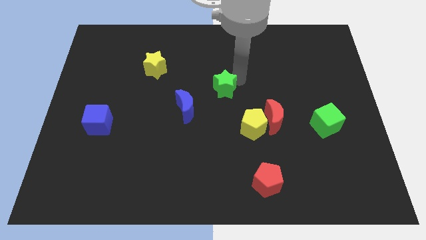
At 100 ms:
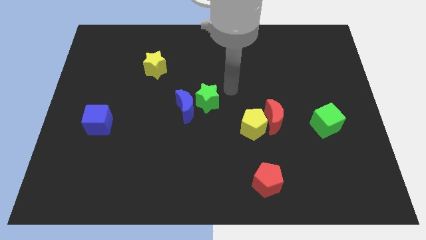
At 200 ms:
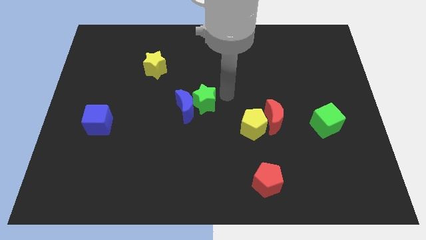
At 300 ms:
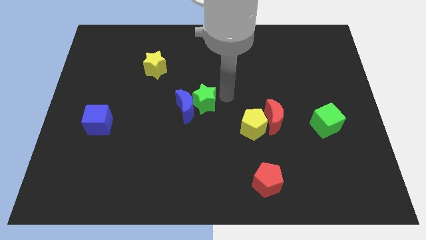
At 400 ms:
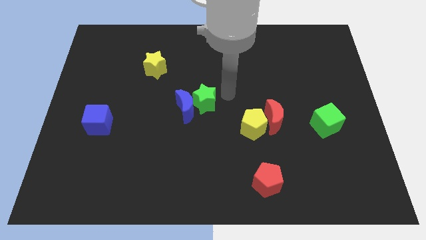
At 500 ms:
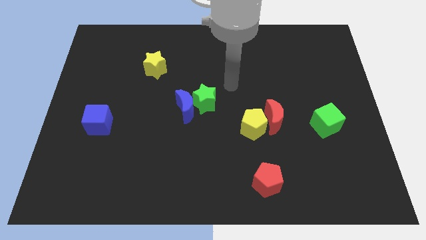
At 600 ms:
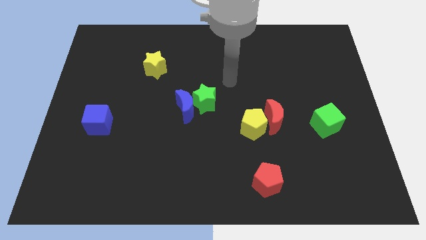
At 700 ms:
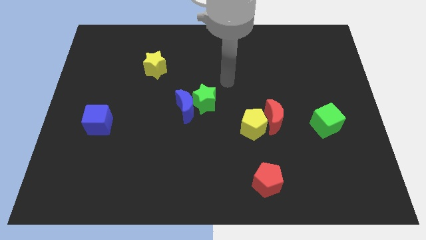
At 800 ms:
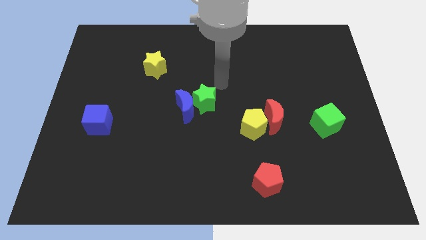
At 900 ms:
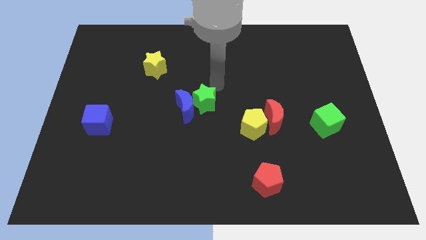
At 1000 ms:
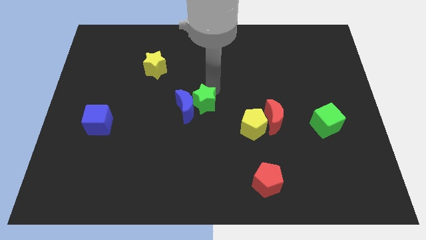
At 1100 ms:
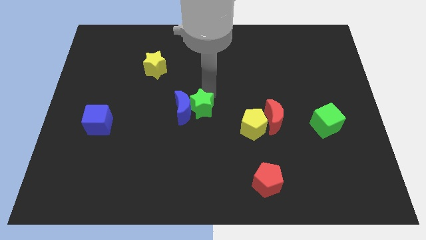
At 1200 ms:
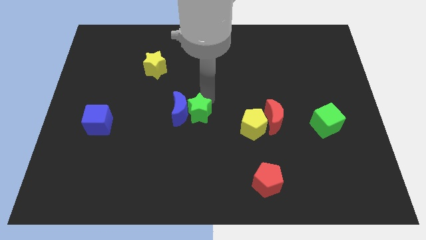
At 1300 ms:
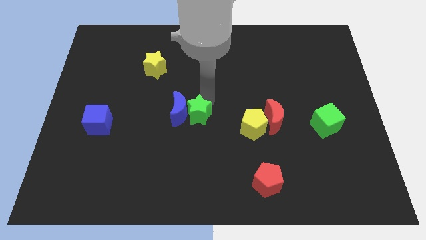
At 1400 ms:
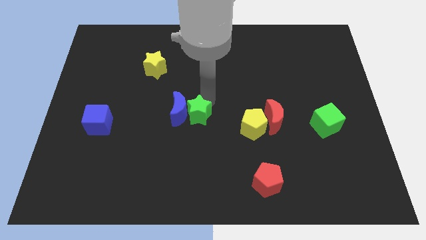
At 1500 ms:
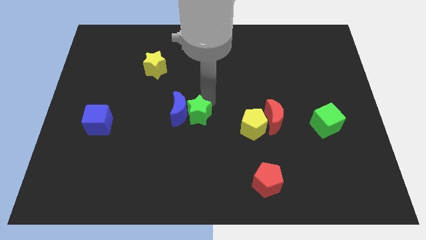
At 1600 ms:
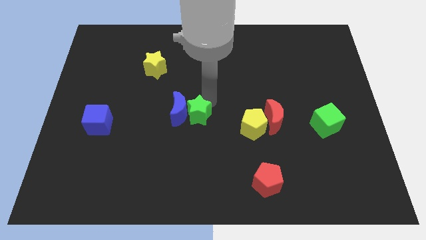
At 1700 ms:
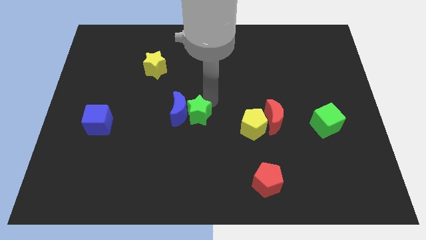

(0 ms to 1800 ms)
drag the green star close to the blue moon

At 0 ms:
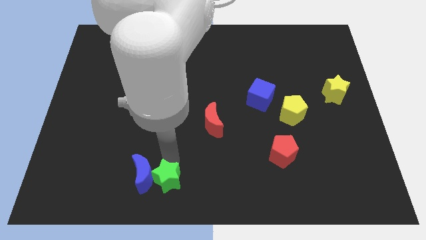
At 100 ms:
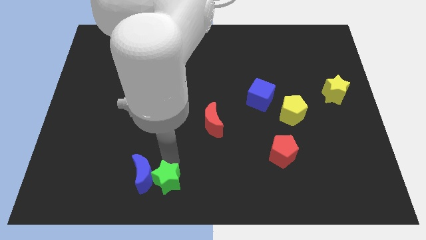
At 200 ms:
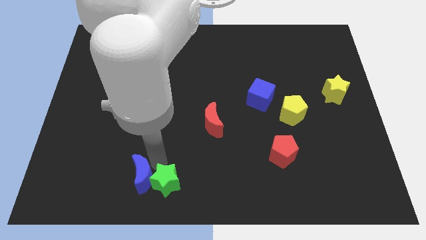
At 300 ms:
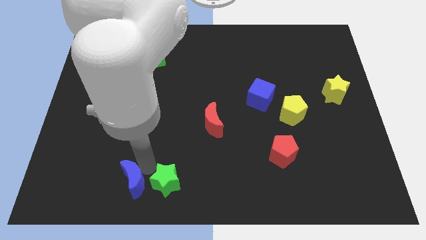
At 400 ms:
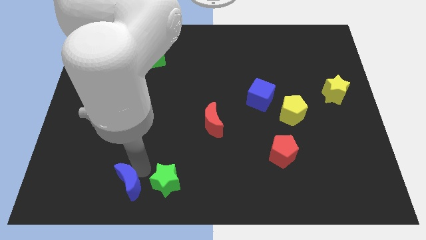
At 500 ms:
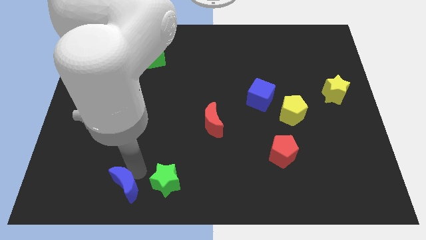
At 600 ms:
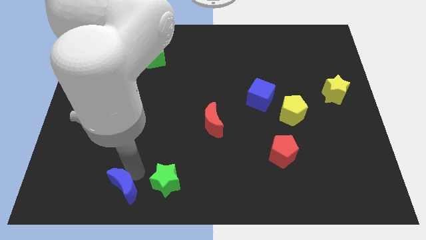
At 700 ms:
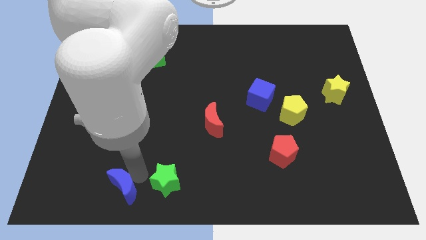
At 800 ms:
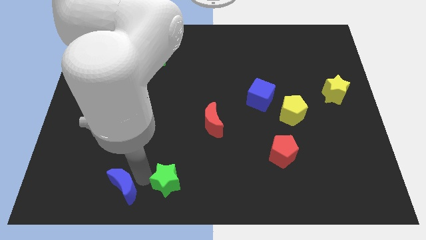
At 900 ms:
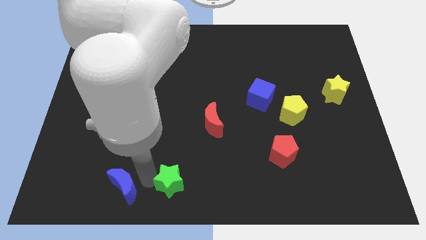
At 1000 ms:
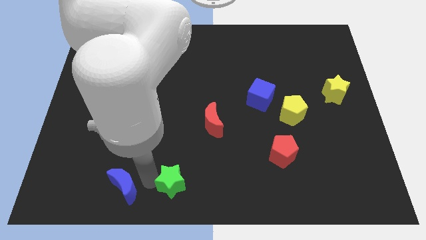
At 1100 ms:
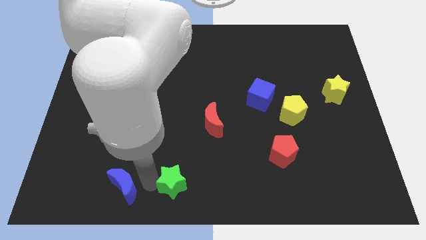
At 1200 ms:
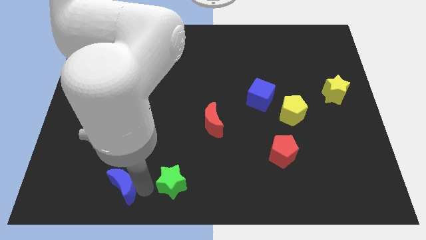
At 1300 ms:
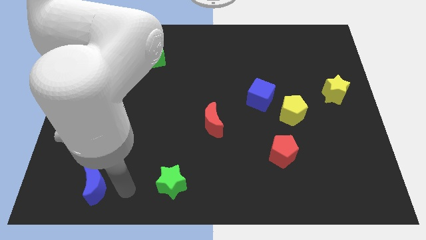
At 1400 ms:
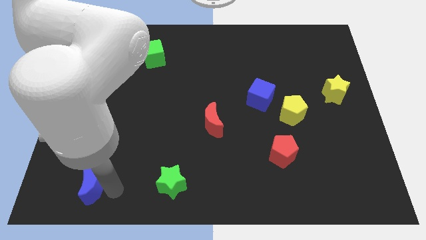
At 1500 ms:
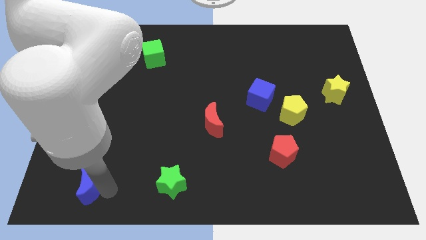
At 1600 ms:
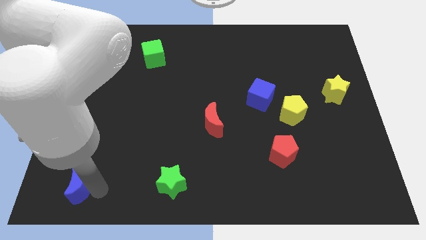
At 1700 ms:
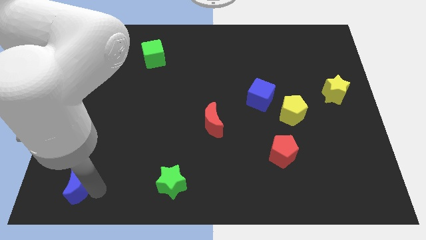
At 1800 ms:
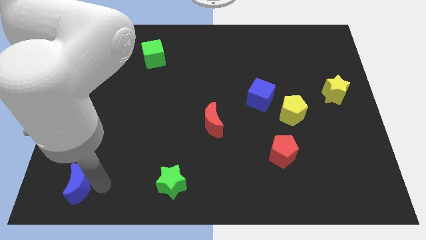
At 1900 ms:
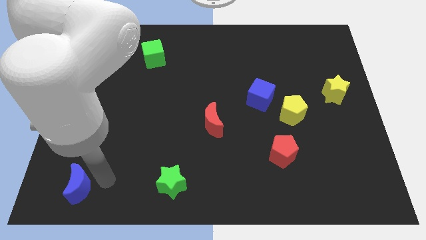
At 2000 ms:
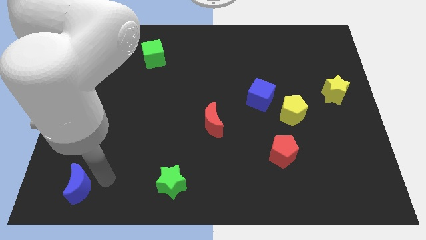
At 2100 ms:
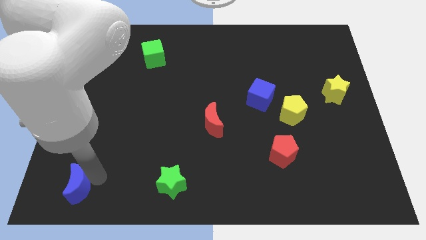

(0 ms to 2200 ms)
seperate the blue moon and green star

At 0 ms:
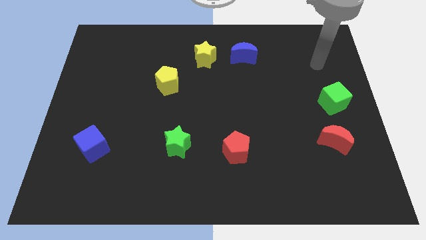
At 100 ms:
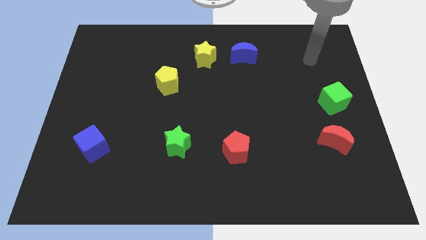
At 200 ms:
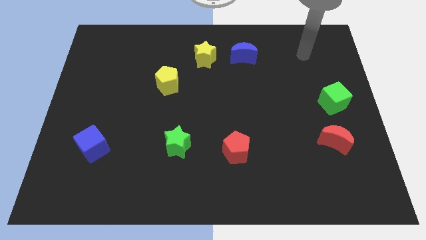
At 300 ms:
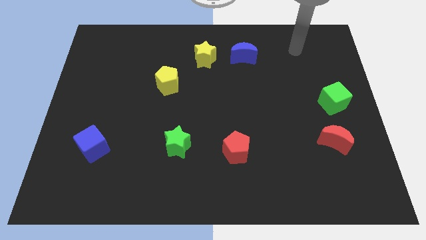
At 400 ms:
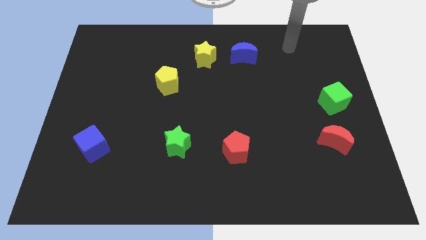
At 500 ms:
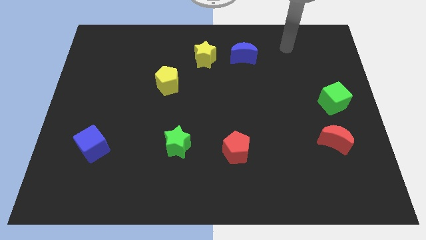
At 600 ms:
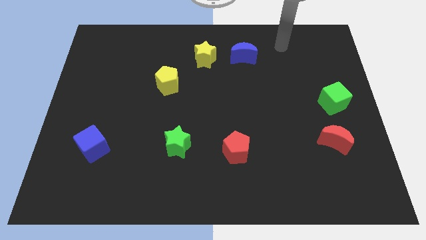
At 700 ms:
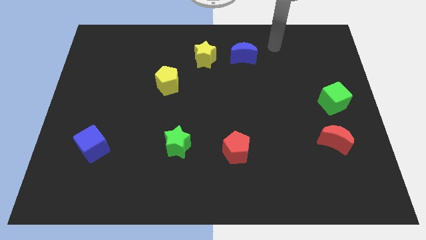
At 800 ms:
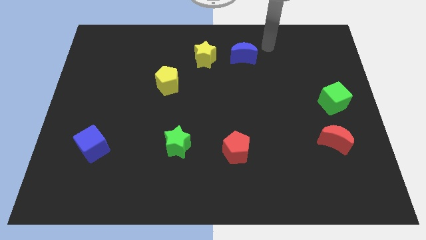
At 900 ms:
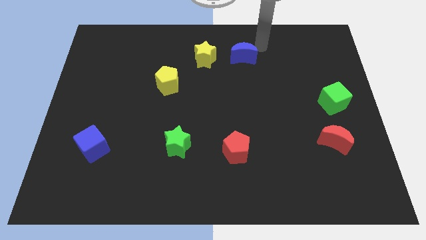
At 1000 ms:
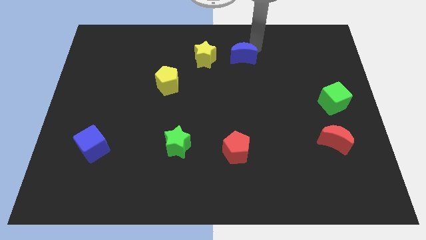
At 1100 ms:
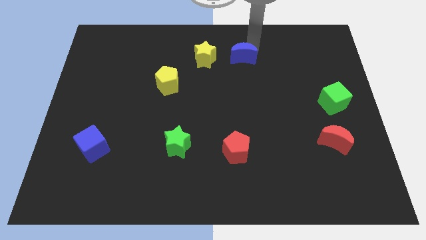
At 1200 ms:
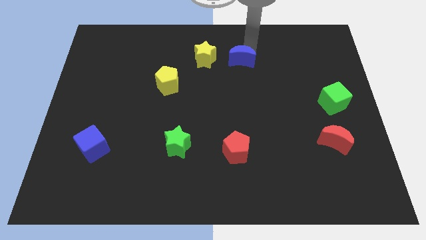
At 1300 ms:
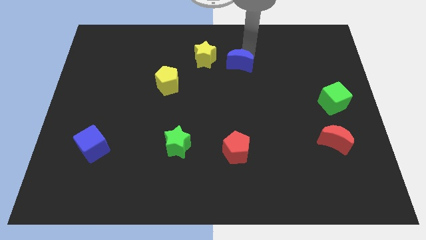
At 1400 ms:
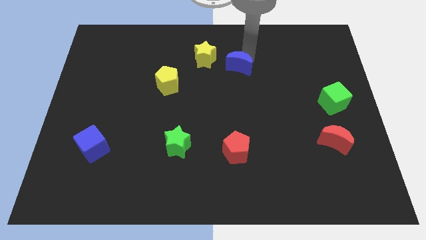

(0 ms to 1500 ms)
move arm towards the blue crescent on the right top of the board

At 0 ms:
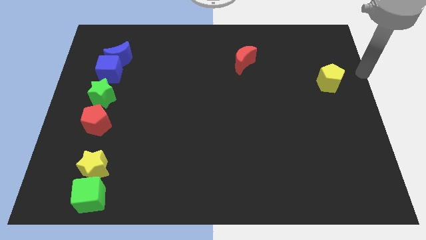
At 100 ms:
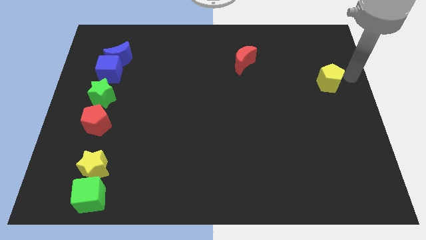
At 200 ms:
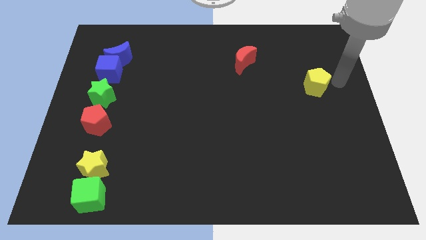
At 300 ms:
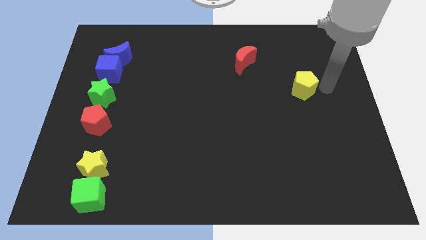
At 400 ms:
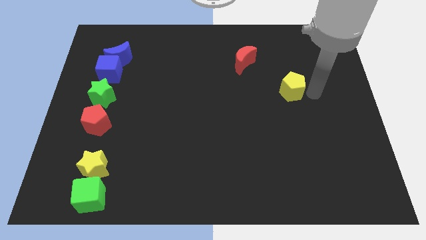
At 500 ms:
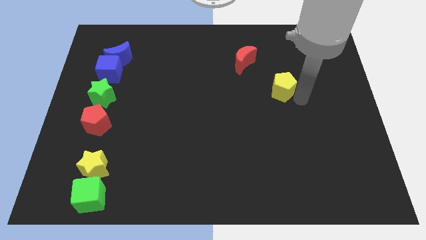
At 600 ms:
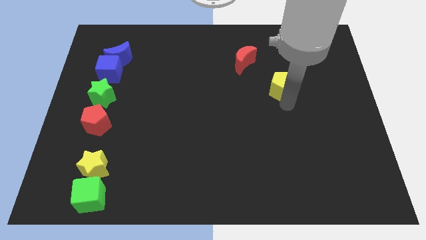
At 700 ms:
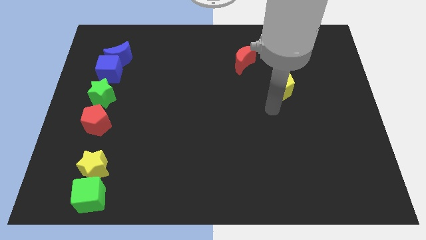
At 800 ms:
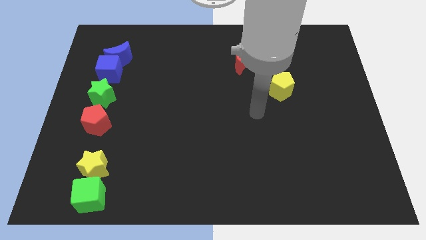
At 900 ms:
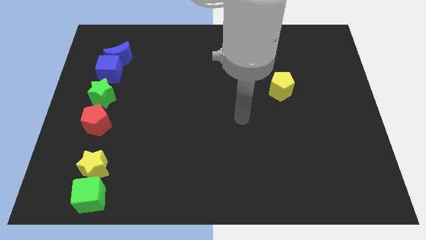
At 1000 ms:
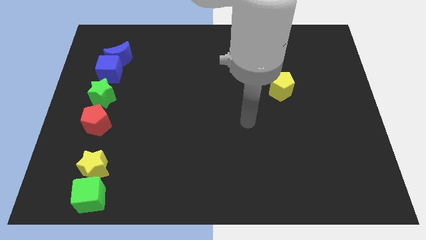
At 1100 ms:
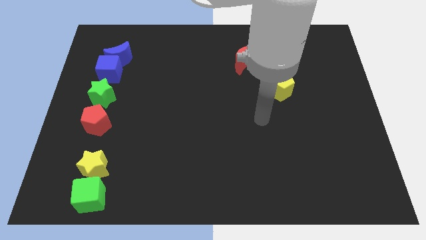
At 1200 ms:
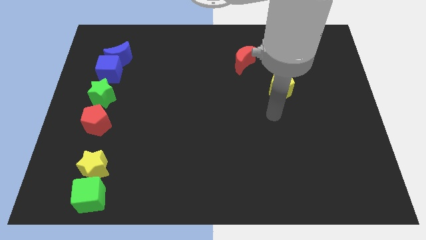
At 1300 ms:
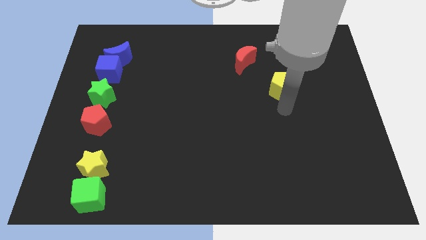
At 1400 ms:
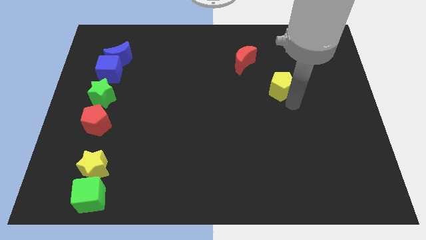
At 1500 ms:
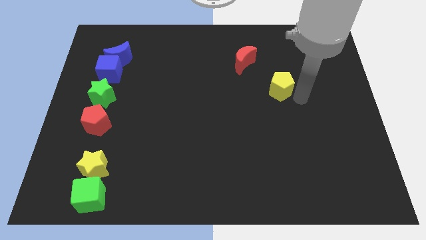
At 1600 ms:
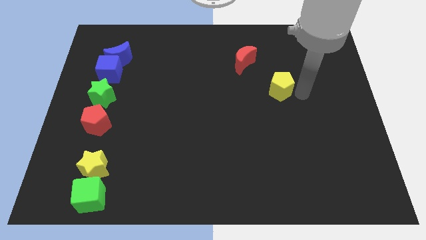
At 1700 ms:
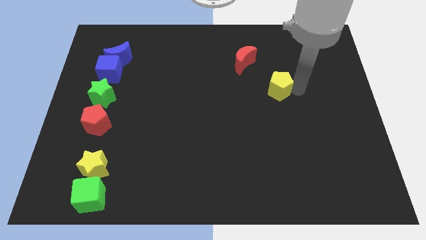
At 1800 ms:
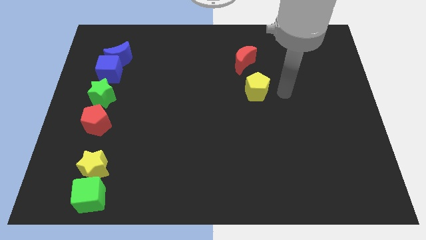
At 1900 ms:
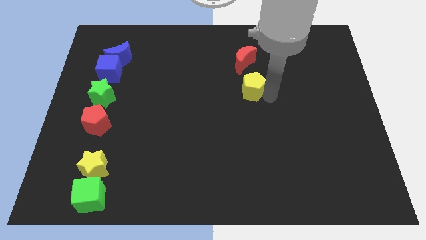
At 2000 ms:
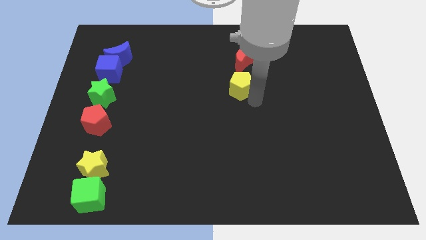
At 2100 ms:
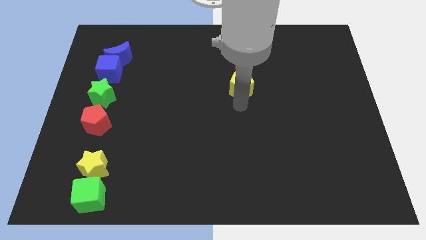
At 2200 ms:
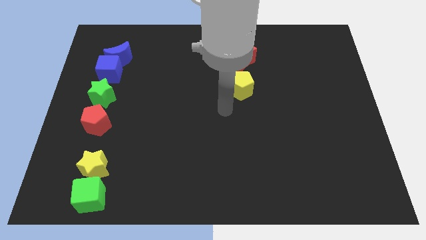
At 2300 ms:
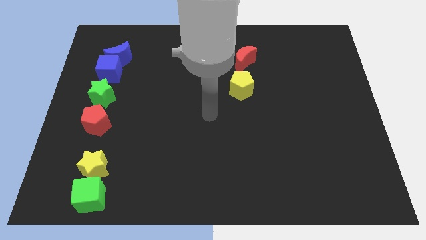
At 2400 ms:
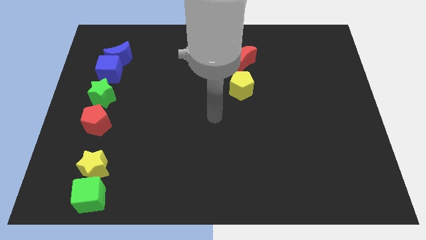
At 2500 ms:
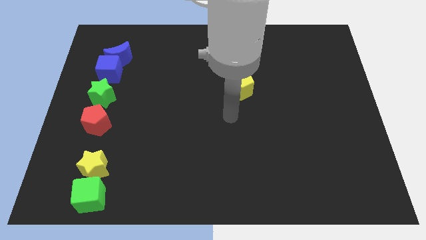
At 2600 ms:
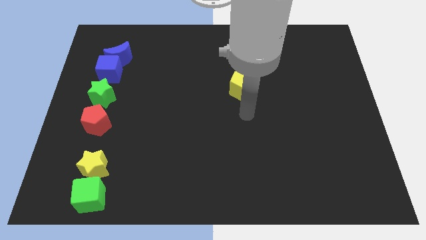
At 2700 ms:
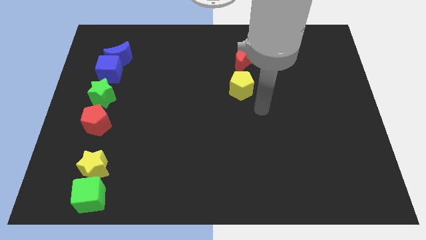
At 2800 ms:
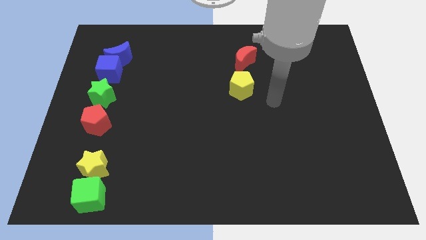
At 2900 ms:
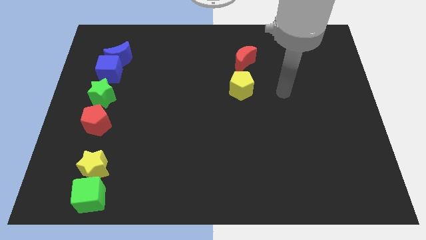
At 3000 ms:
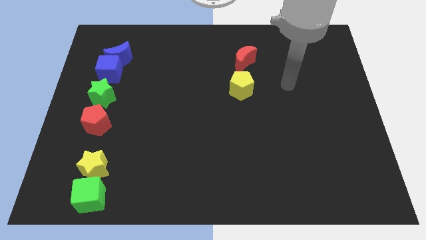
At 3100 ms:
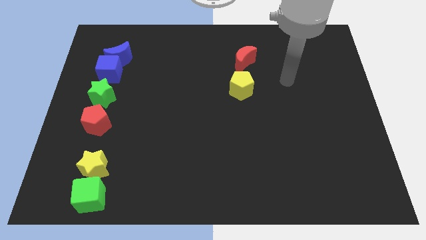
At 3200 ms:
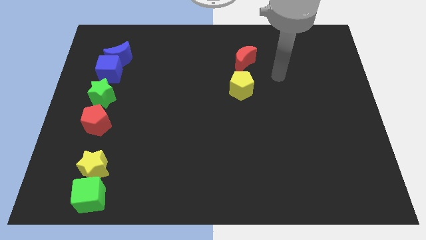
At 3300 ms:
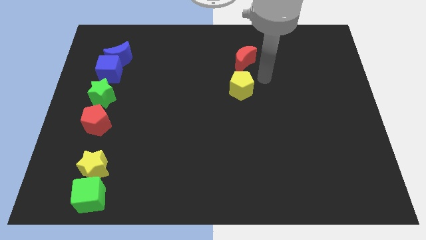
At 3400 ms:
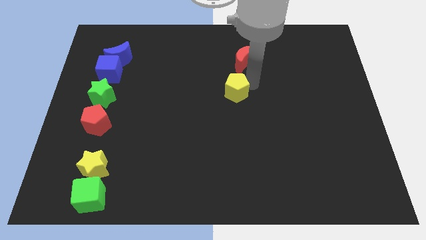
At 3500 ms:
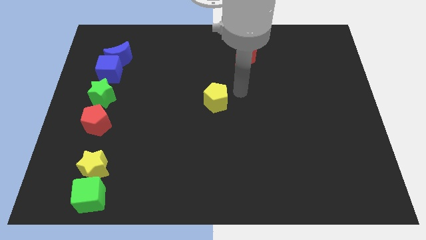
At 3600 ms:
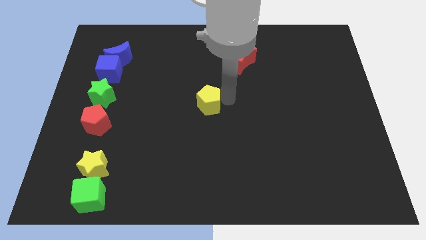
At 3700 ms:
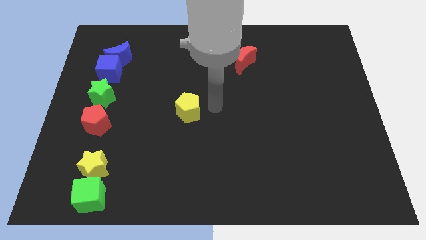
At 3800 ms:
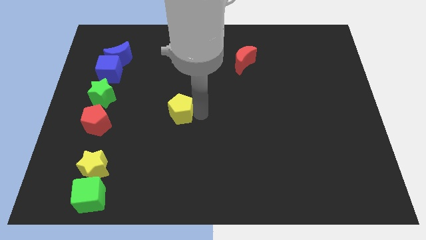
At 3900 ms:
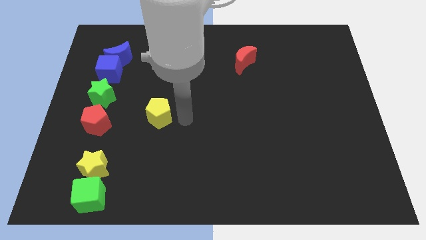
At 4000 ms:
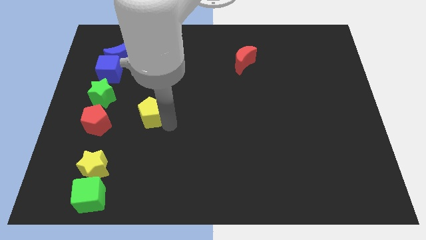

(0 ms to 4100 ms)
move the yellow pentagon diagonal to the right of the red pentagon
